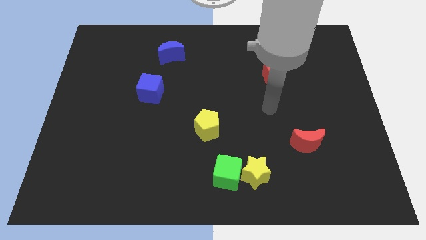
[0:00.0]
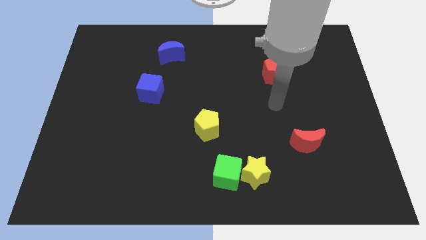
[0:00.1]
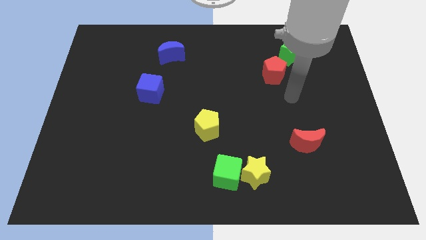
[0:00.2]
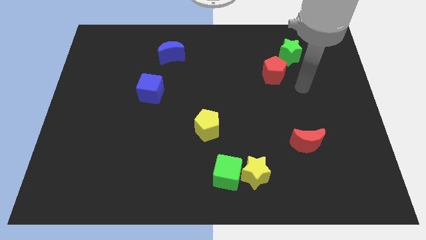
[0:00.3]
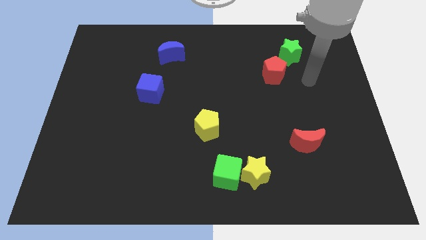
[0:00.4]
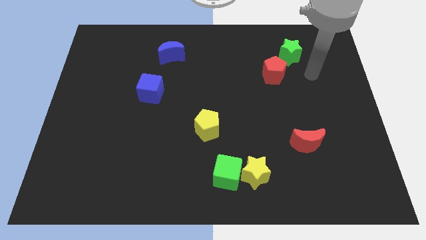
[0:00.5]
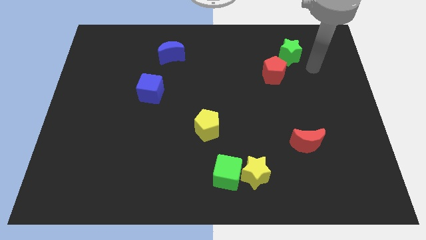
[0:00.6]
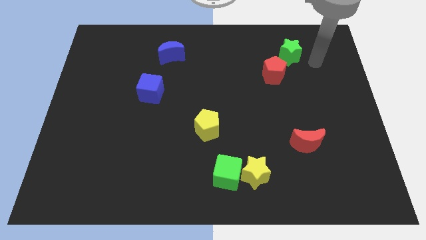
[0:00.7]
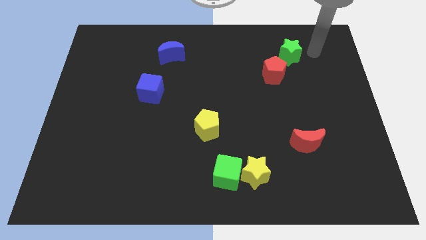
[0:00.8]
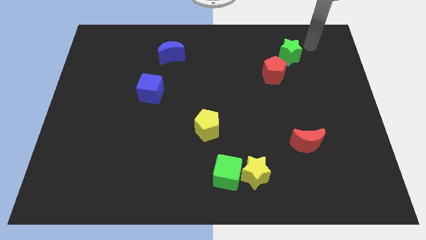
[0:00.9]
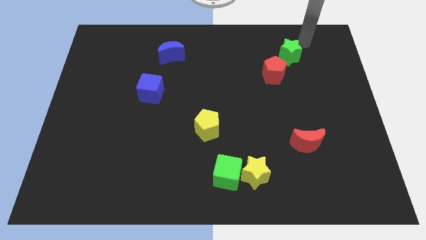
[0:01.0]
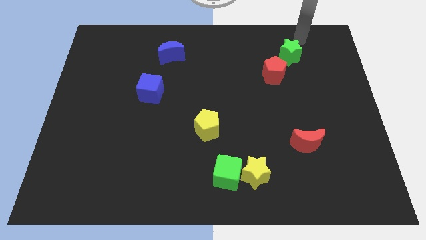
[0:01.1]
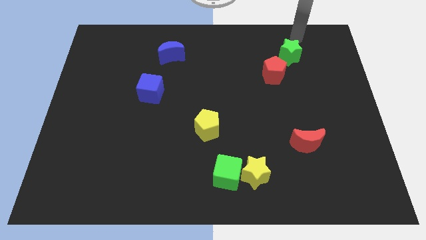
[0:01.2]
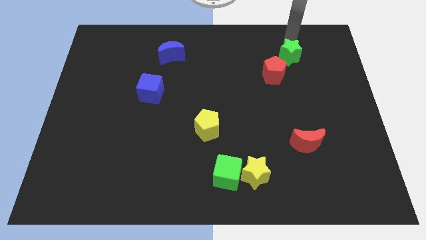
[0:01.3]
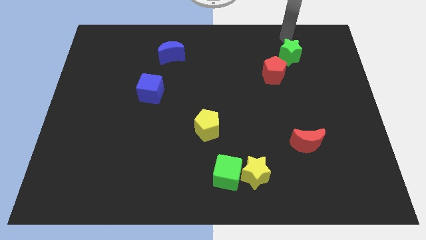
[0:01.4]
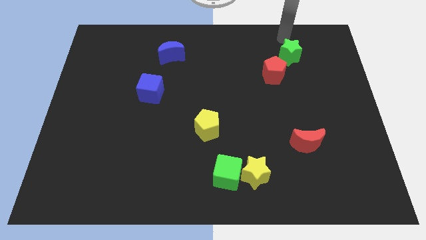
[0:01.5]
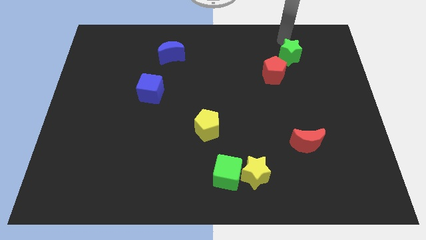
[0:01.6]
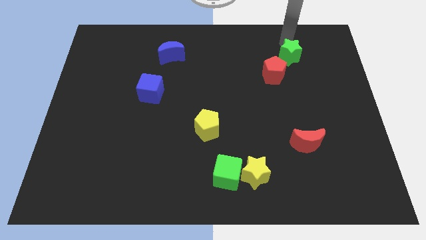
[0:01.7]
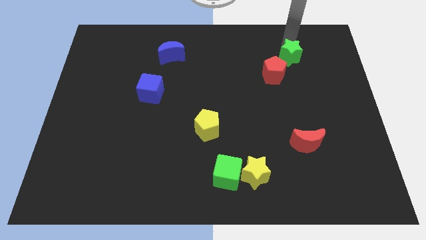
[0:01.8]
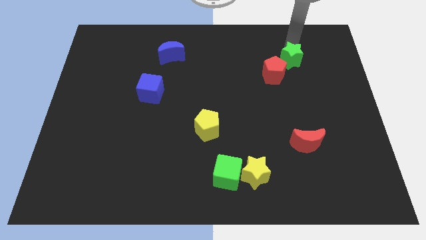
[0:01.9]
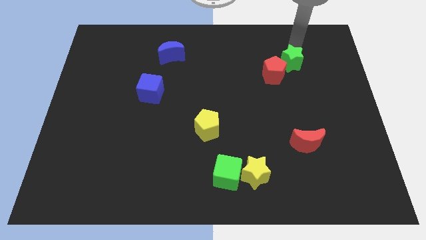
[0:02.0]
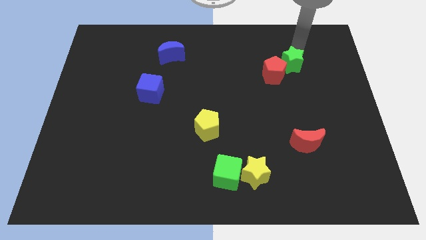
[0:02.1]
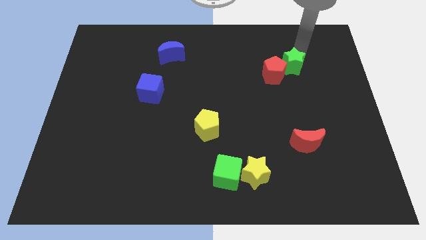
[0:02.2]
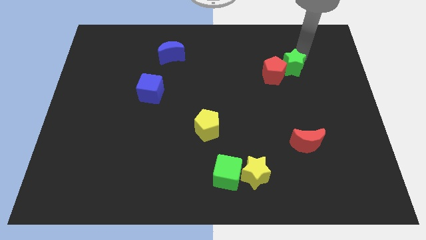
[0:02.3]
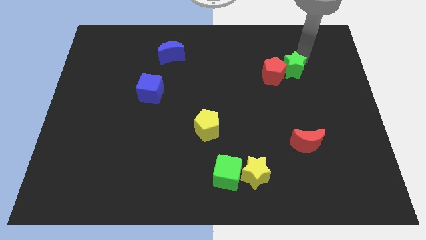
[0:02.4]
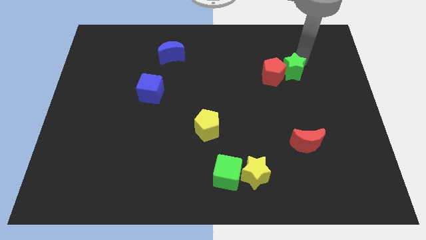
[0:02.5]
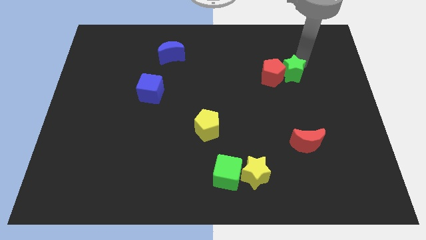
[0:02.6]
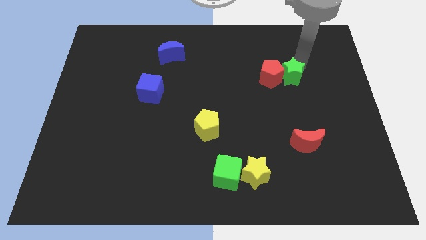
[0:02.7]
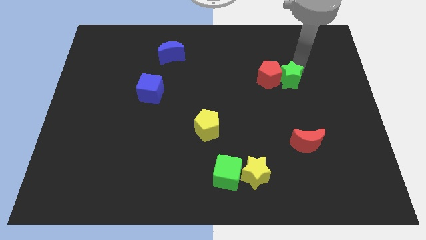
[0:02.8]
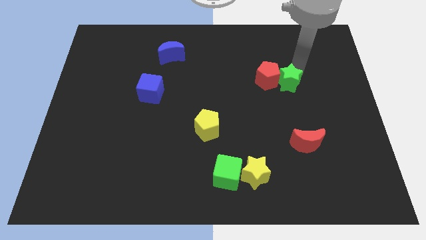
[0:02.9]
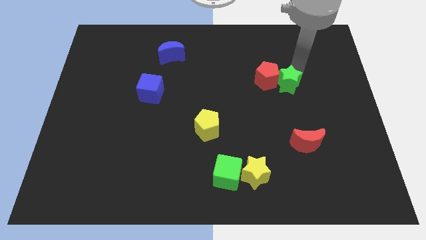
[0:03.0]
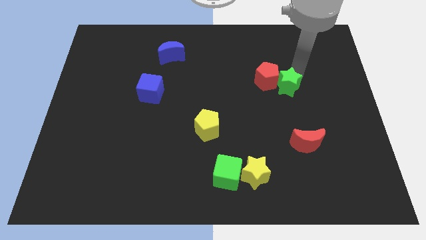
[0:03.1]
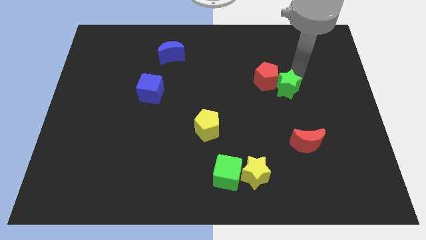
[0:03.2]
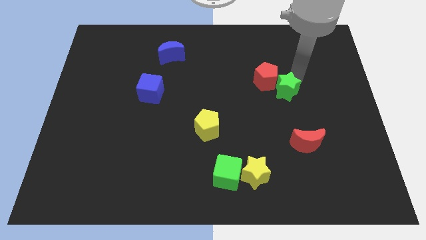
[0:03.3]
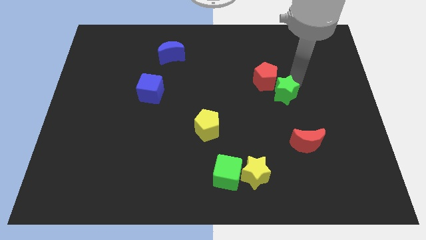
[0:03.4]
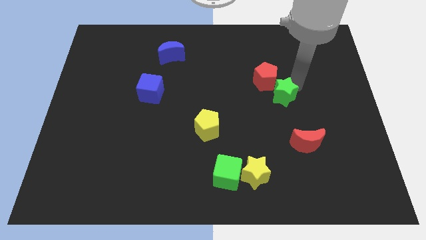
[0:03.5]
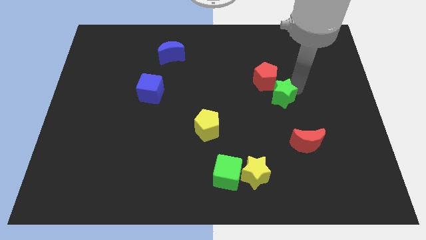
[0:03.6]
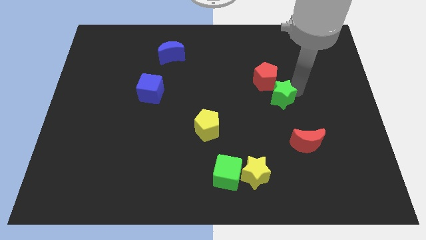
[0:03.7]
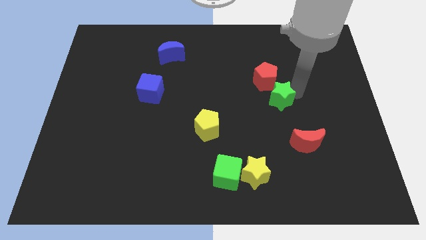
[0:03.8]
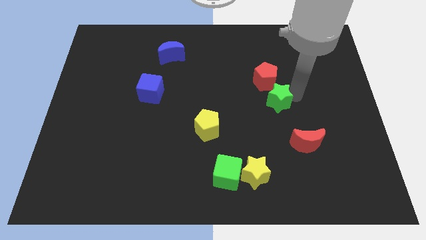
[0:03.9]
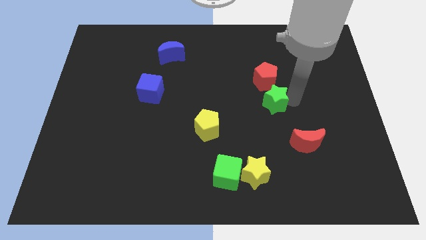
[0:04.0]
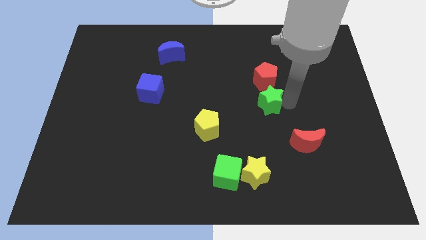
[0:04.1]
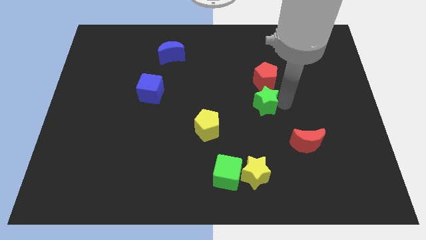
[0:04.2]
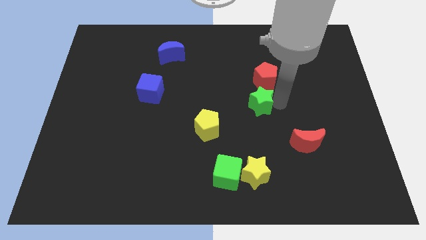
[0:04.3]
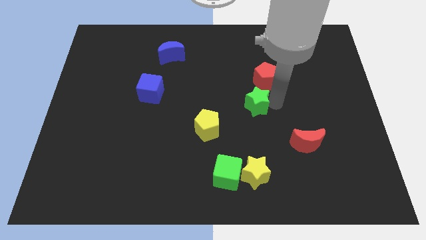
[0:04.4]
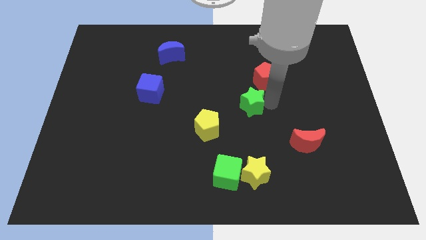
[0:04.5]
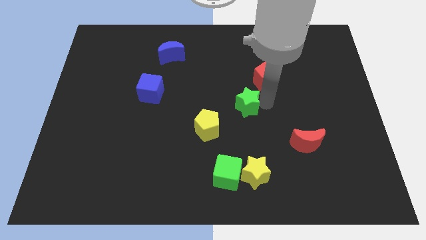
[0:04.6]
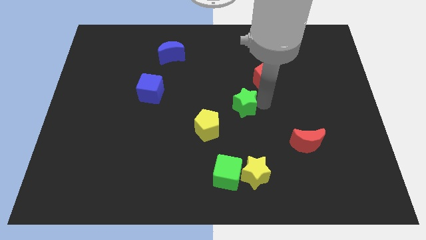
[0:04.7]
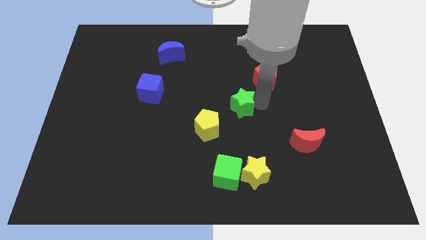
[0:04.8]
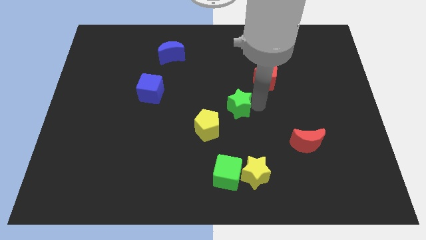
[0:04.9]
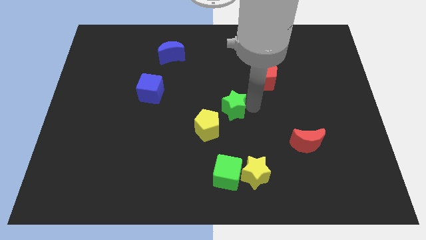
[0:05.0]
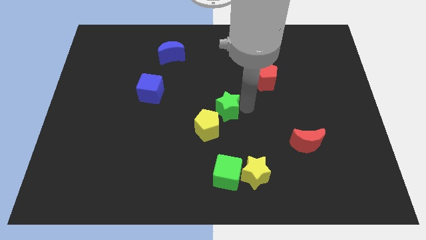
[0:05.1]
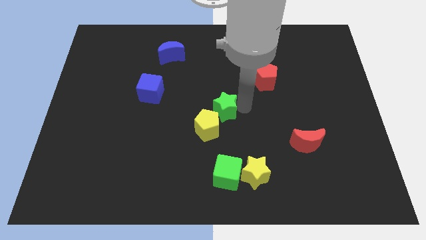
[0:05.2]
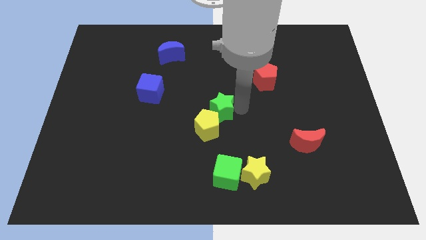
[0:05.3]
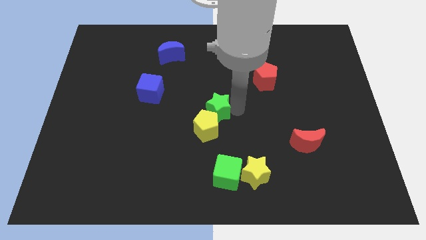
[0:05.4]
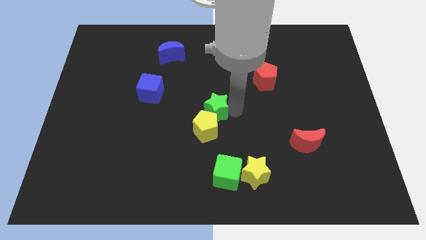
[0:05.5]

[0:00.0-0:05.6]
slide the green star to the yellow pentagon

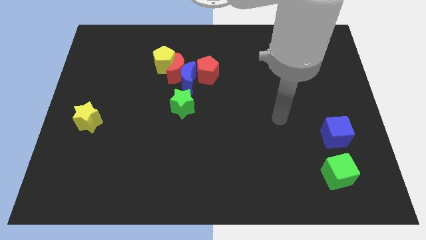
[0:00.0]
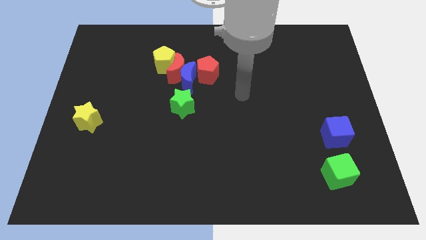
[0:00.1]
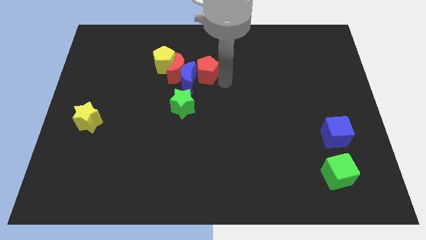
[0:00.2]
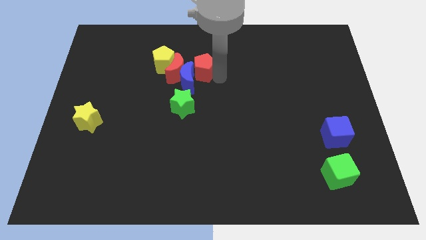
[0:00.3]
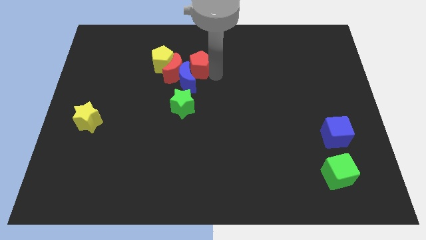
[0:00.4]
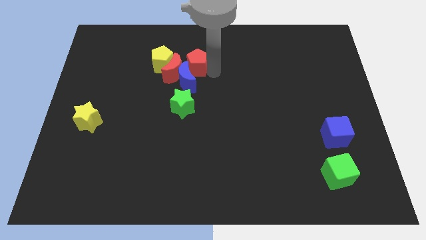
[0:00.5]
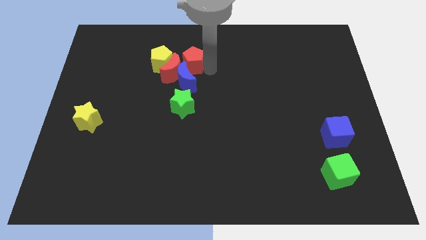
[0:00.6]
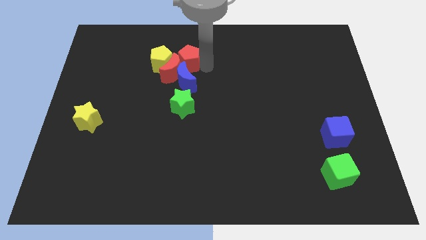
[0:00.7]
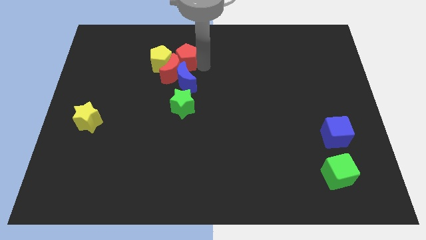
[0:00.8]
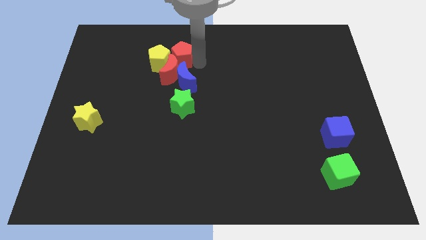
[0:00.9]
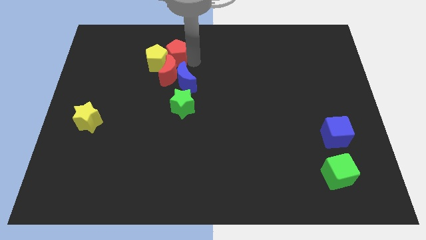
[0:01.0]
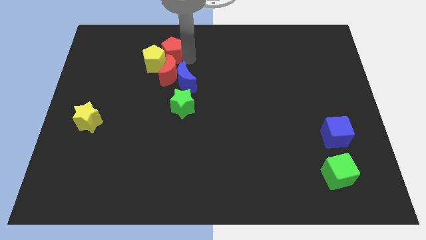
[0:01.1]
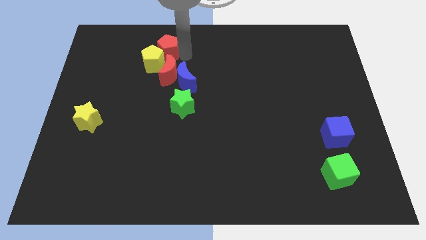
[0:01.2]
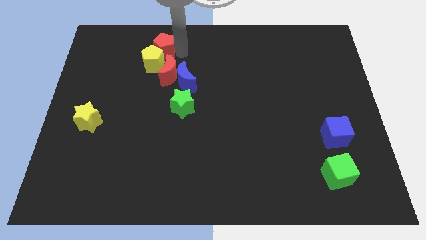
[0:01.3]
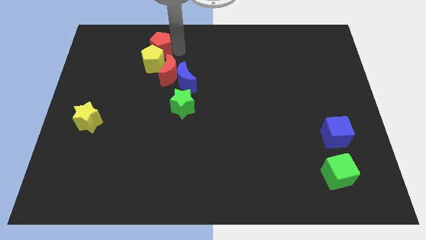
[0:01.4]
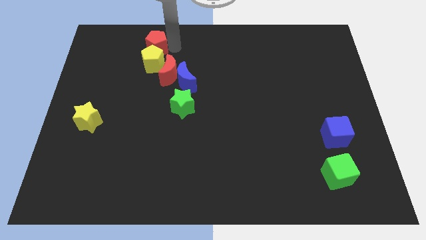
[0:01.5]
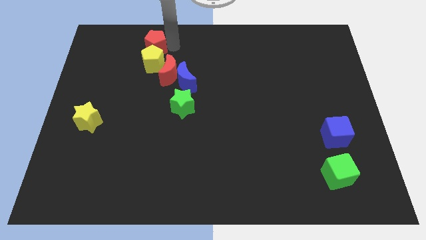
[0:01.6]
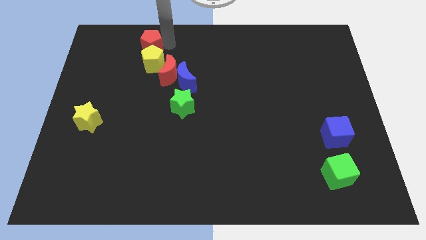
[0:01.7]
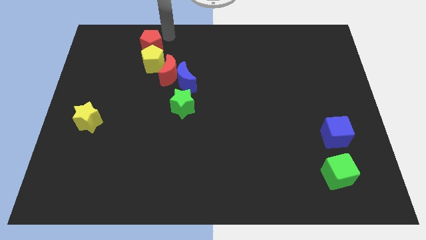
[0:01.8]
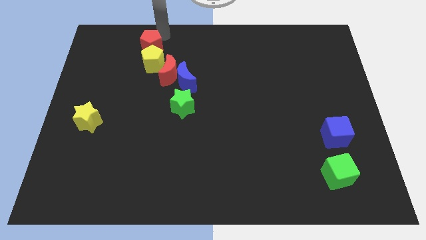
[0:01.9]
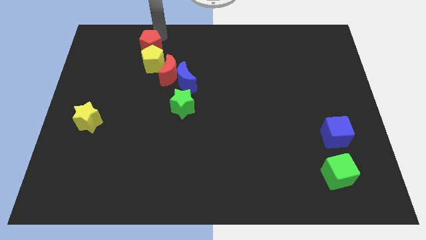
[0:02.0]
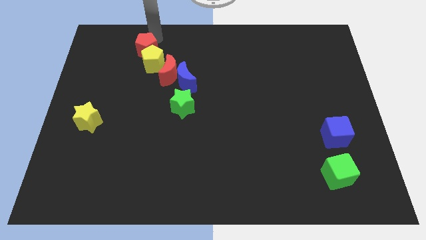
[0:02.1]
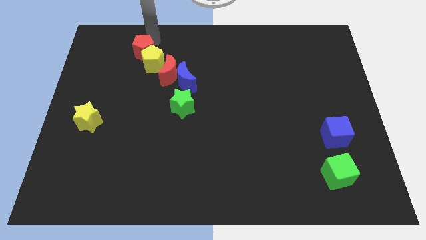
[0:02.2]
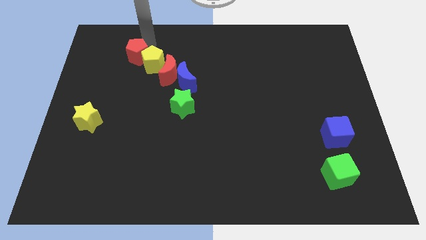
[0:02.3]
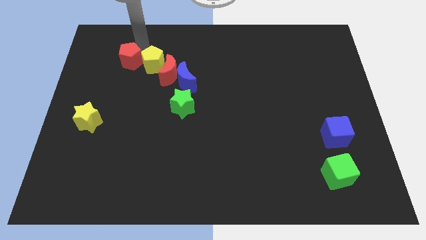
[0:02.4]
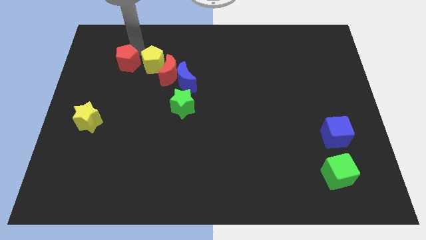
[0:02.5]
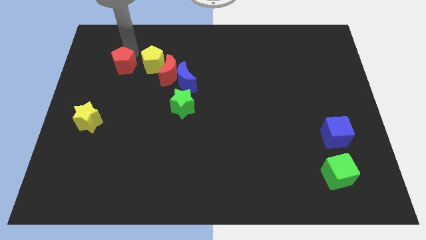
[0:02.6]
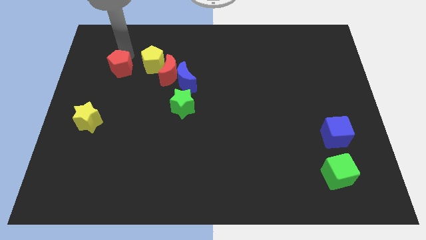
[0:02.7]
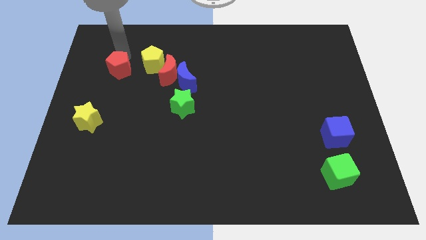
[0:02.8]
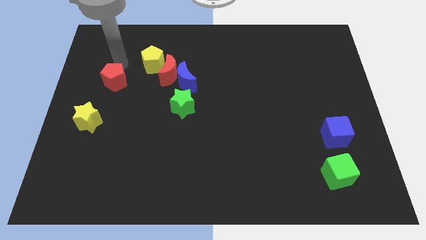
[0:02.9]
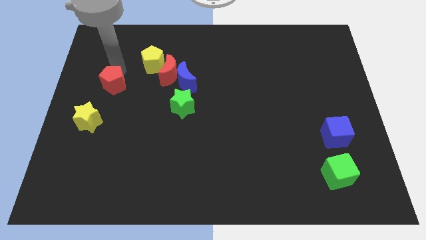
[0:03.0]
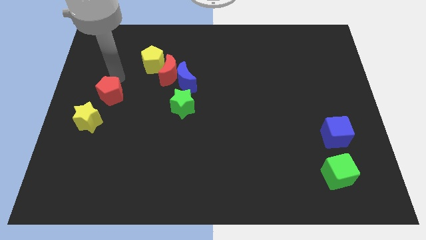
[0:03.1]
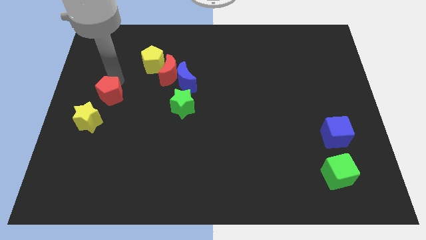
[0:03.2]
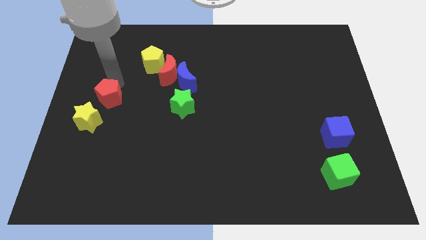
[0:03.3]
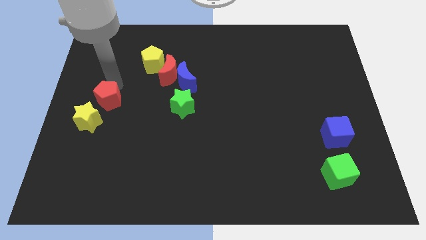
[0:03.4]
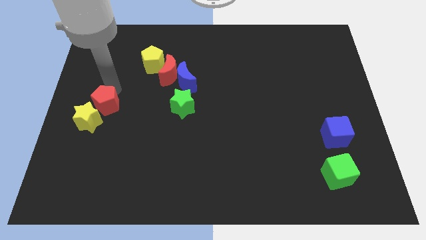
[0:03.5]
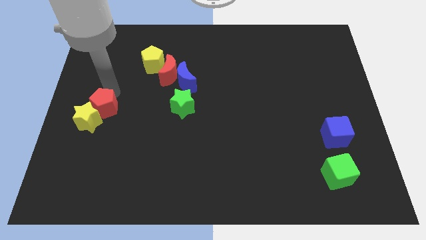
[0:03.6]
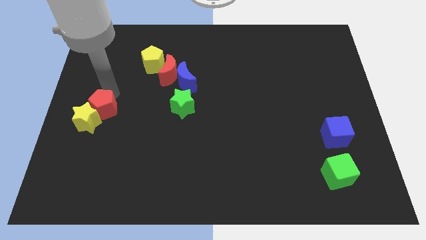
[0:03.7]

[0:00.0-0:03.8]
put the red pentagon towards the yellow star
